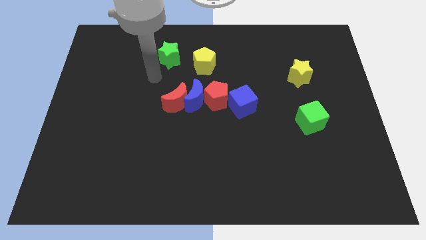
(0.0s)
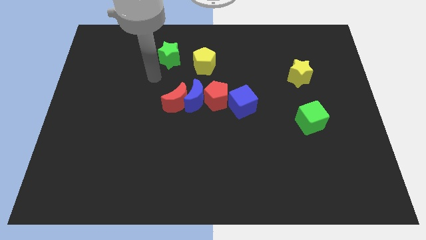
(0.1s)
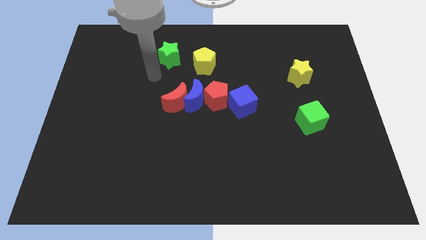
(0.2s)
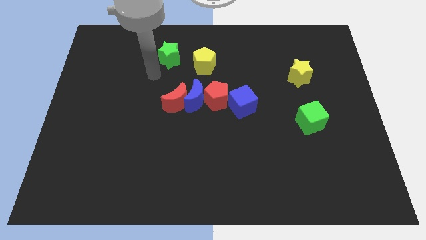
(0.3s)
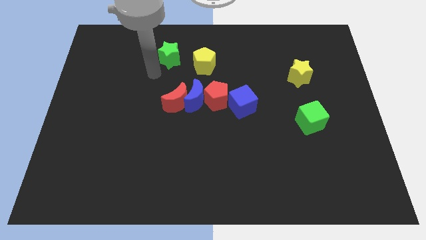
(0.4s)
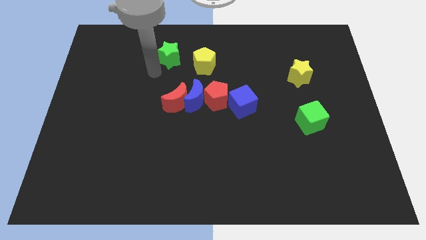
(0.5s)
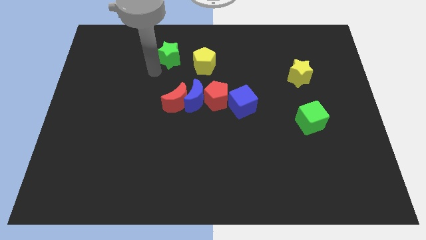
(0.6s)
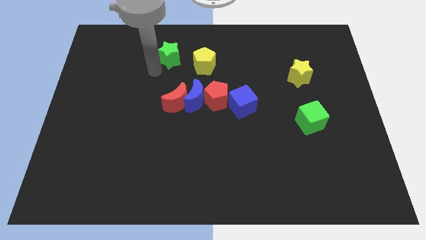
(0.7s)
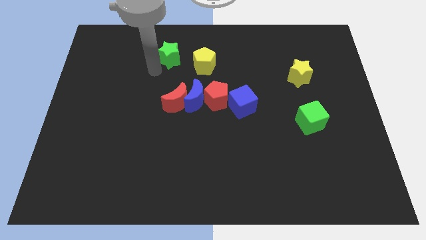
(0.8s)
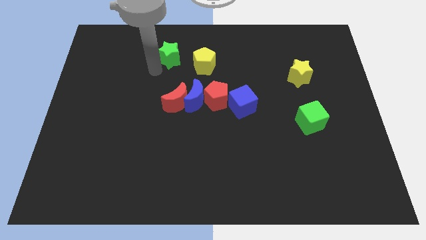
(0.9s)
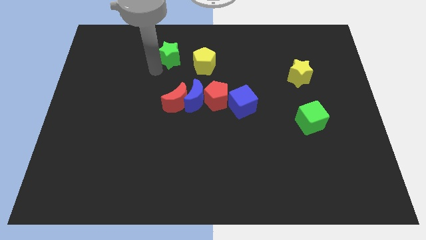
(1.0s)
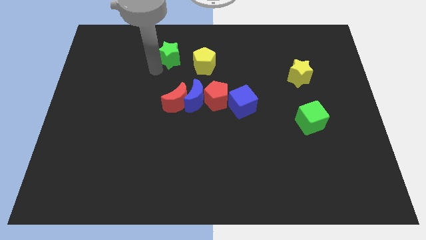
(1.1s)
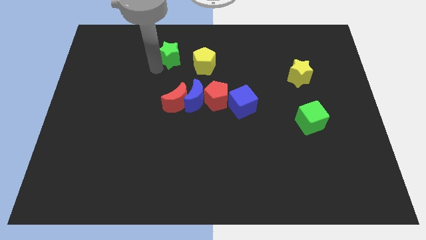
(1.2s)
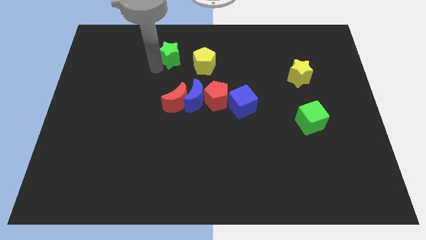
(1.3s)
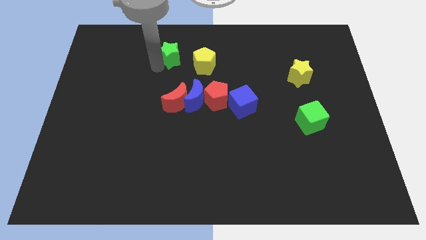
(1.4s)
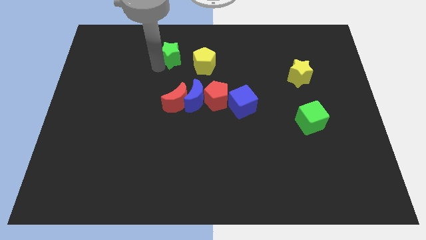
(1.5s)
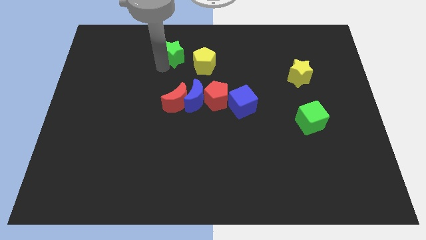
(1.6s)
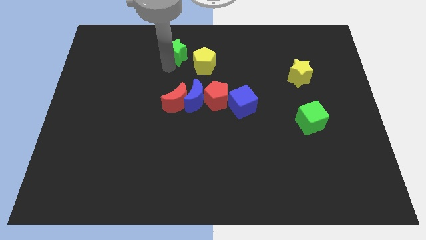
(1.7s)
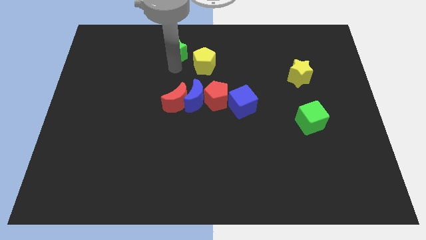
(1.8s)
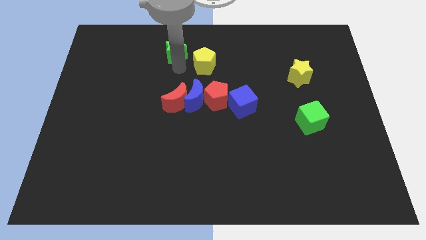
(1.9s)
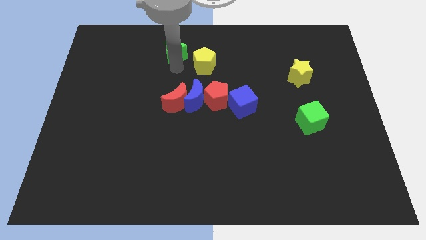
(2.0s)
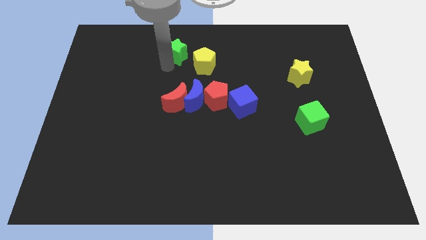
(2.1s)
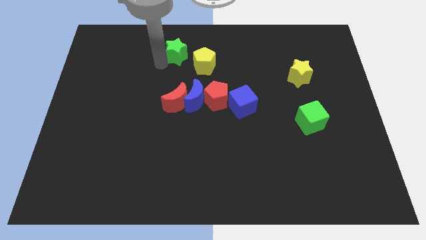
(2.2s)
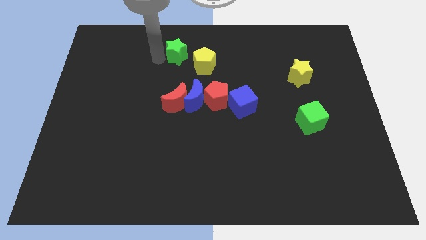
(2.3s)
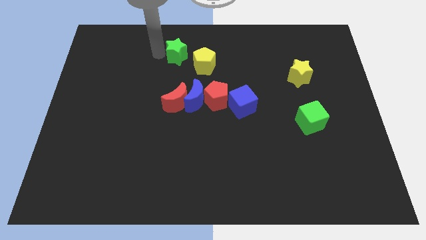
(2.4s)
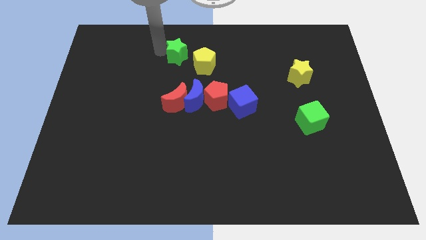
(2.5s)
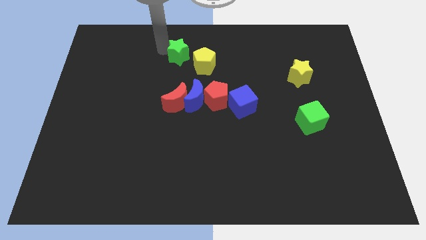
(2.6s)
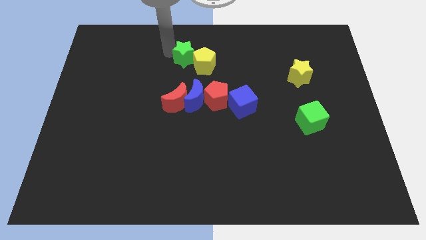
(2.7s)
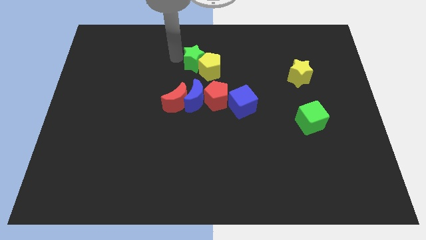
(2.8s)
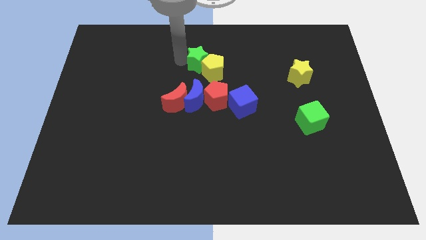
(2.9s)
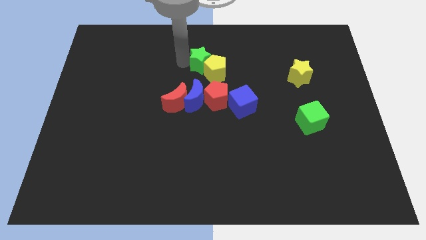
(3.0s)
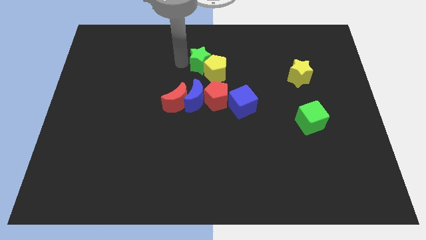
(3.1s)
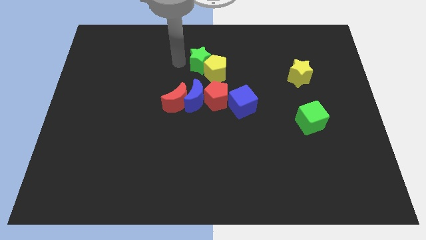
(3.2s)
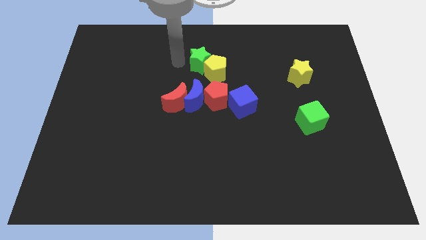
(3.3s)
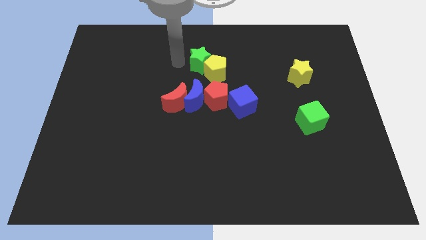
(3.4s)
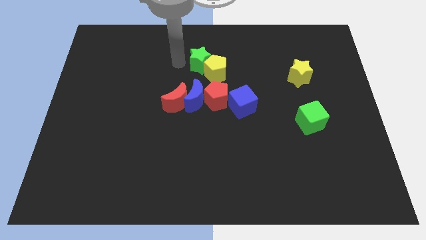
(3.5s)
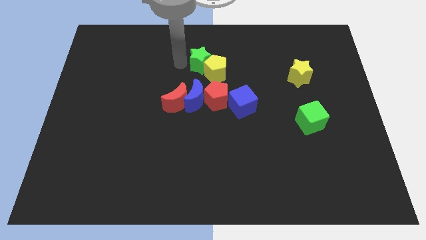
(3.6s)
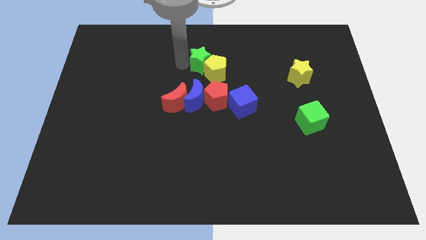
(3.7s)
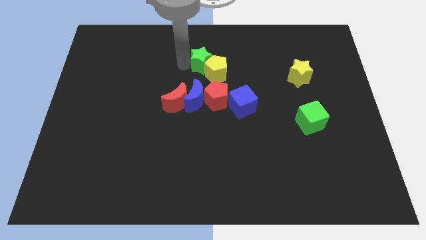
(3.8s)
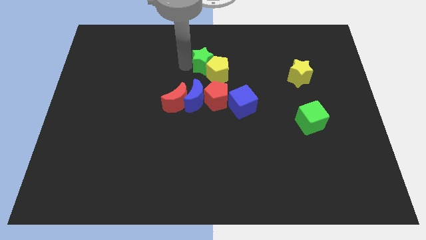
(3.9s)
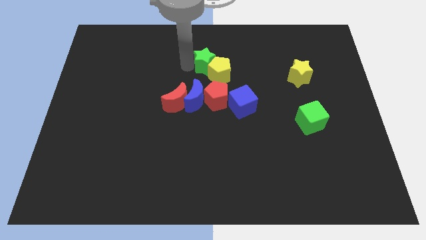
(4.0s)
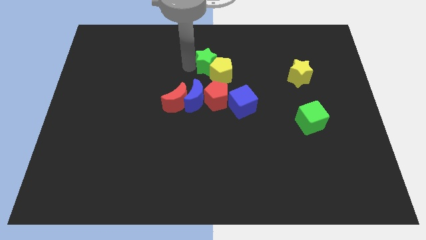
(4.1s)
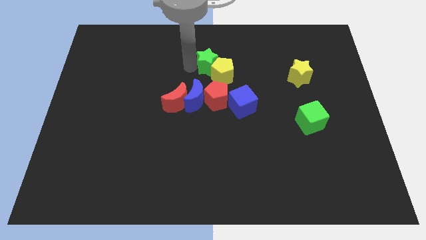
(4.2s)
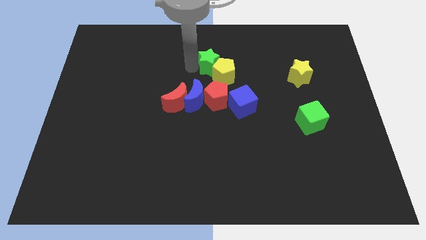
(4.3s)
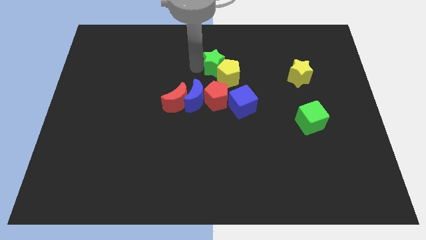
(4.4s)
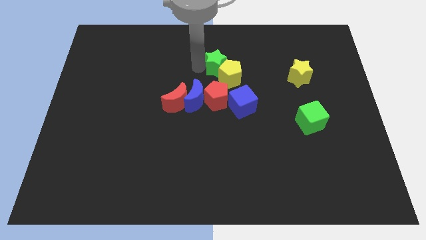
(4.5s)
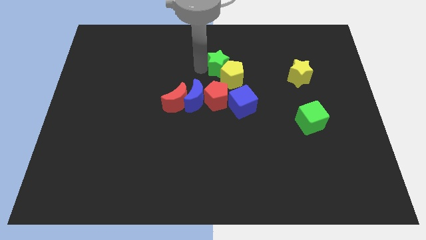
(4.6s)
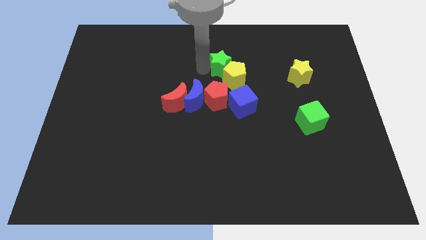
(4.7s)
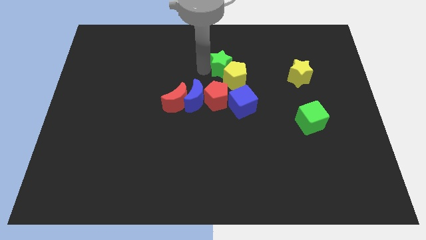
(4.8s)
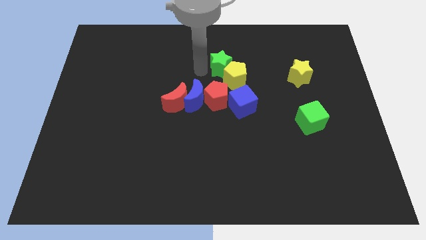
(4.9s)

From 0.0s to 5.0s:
push the green star into the yellow pentagon

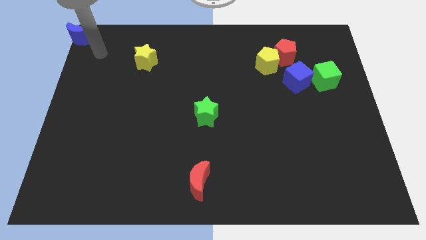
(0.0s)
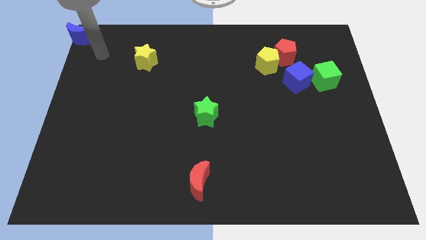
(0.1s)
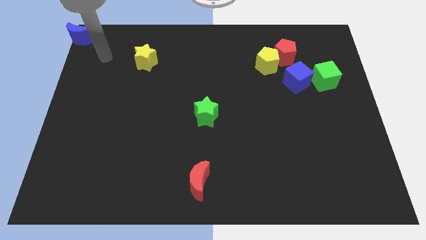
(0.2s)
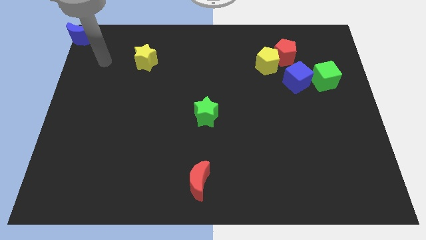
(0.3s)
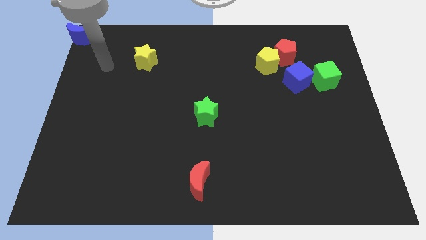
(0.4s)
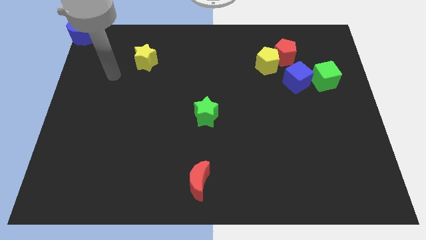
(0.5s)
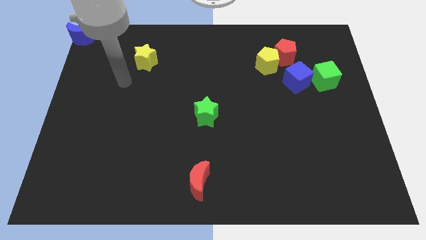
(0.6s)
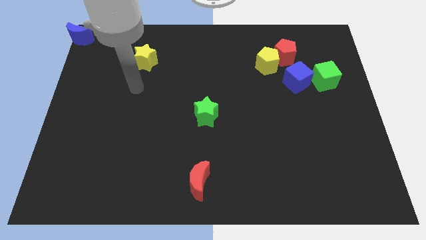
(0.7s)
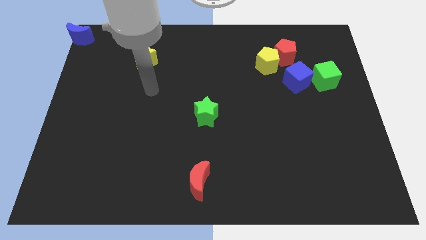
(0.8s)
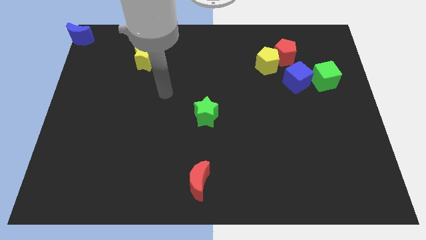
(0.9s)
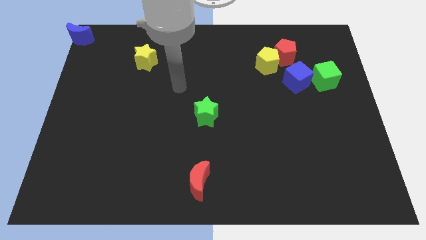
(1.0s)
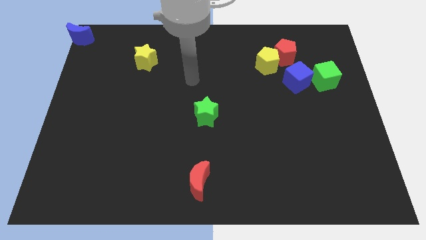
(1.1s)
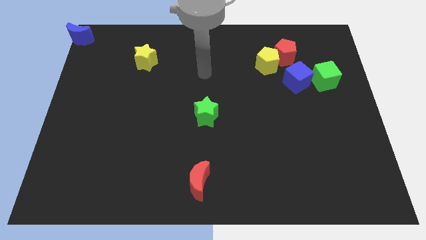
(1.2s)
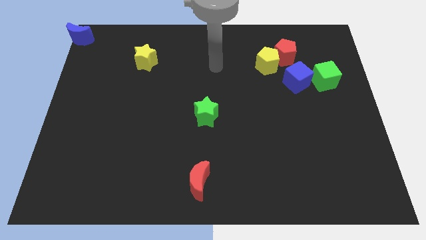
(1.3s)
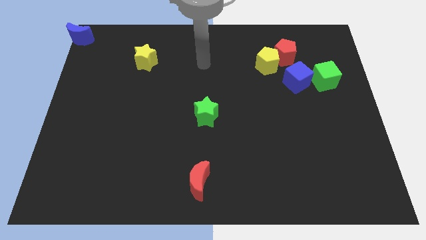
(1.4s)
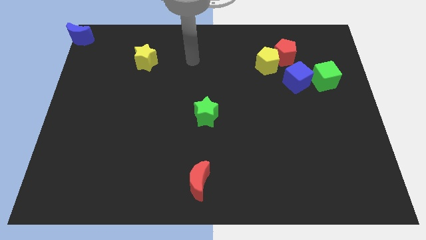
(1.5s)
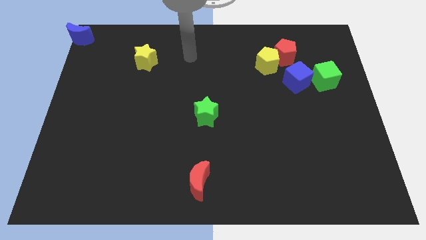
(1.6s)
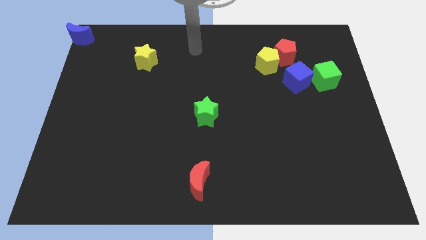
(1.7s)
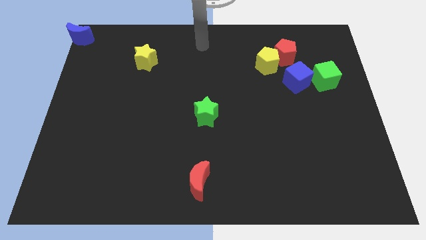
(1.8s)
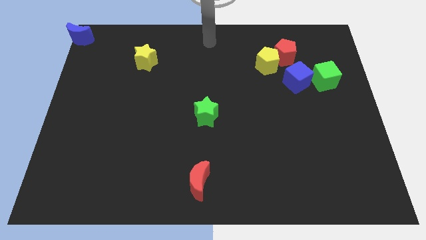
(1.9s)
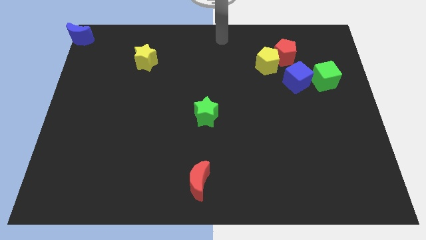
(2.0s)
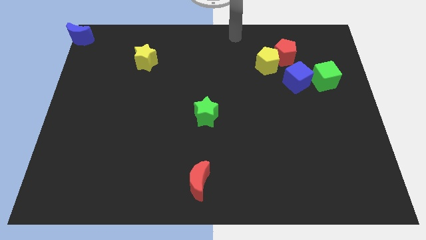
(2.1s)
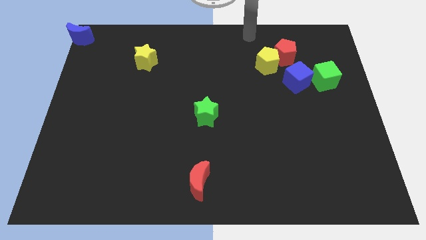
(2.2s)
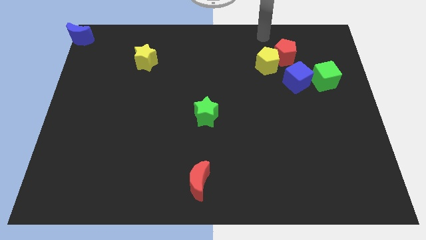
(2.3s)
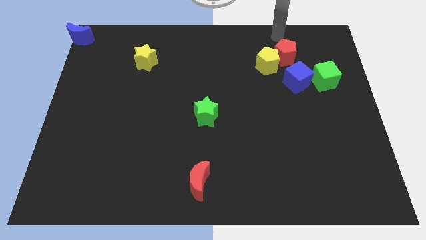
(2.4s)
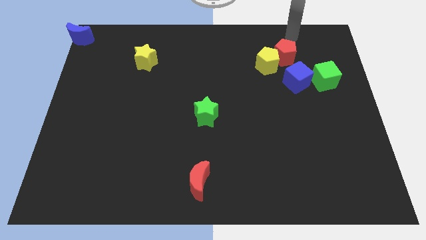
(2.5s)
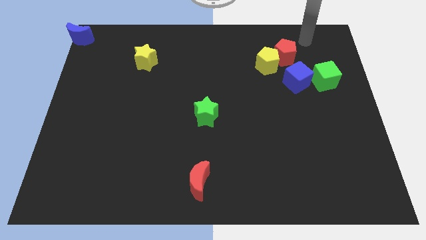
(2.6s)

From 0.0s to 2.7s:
move your arm towards red pentagon

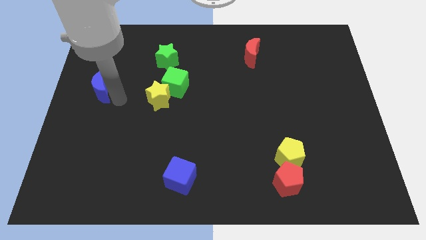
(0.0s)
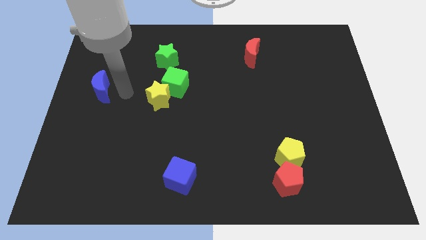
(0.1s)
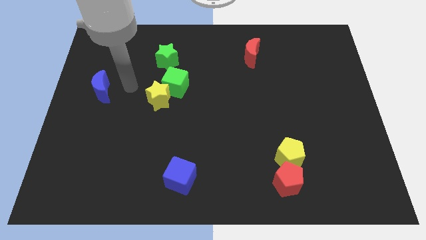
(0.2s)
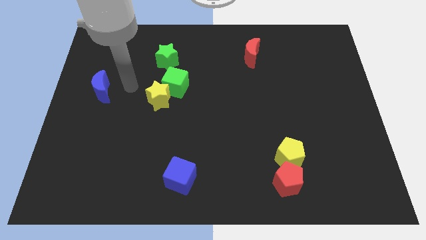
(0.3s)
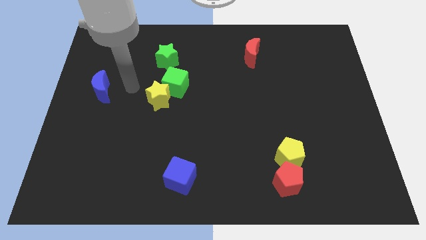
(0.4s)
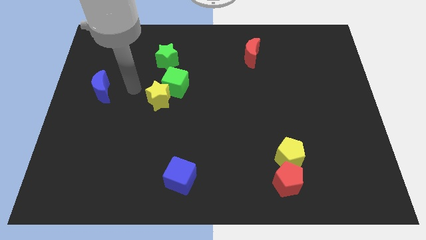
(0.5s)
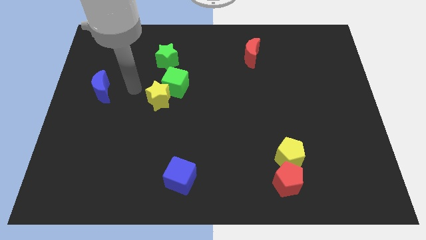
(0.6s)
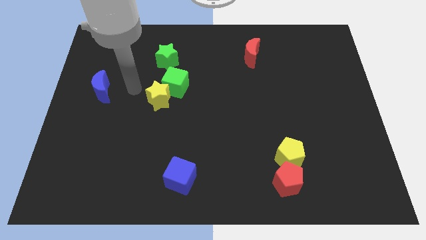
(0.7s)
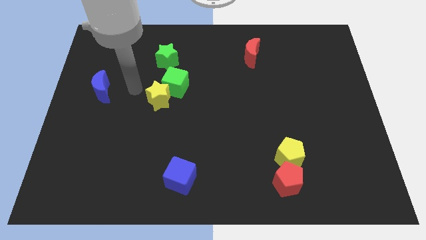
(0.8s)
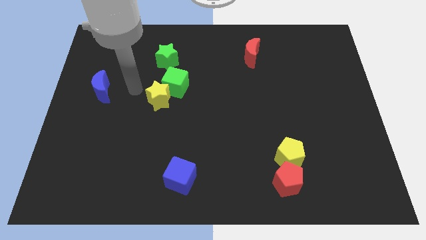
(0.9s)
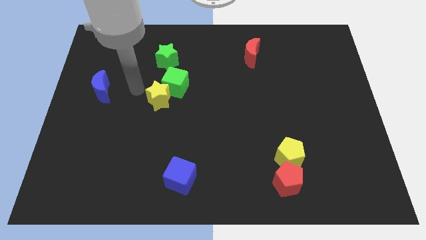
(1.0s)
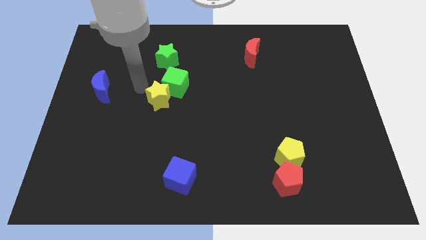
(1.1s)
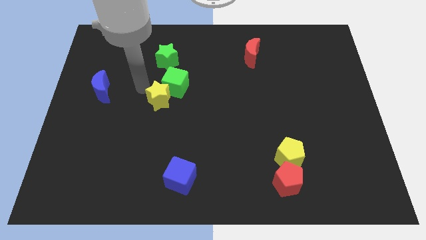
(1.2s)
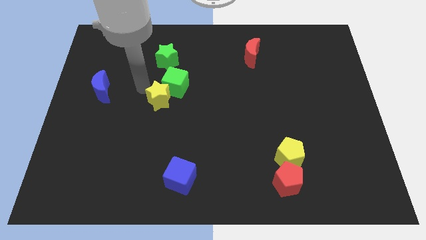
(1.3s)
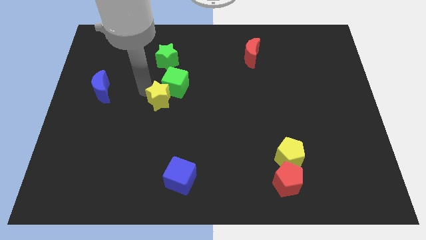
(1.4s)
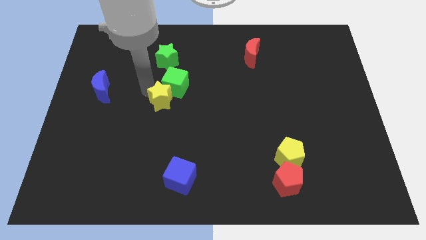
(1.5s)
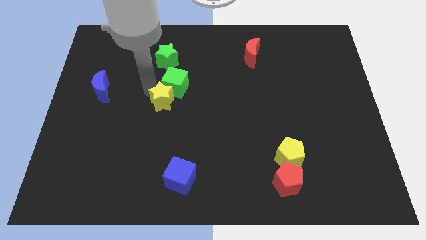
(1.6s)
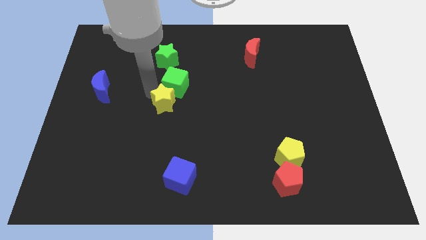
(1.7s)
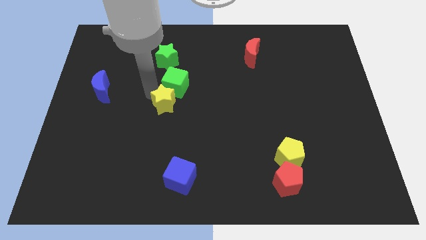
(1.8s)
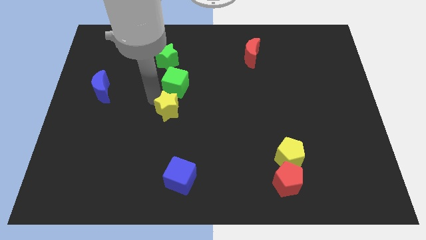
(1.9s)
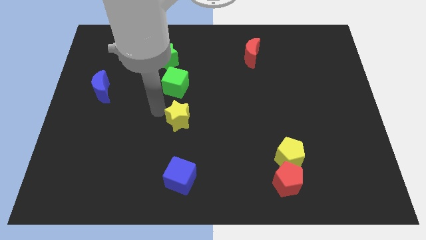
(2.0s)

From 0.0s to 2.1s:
place the yellow star in between green cube and blue cube
